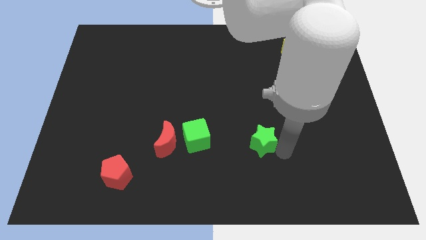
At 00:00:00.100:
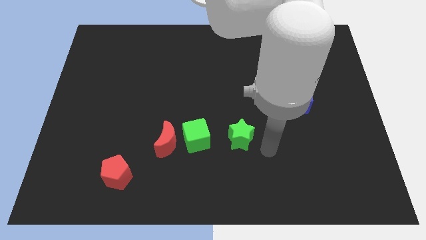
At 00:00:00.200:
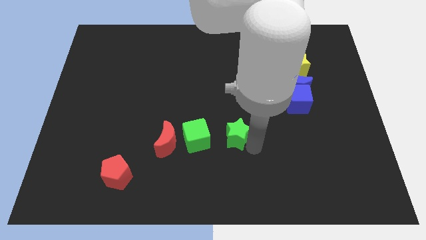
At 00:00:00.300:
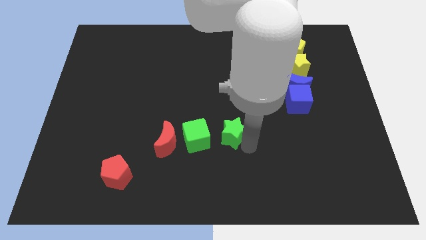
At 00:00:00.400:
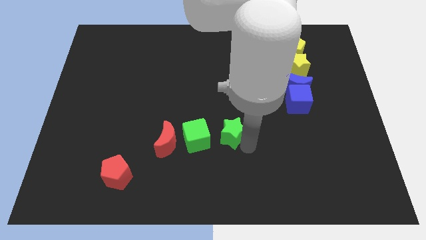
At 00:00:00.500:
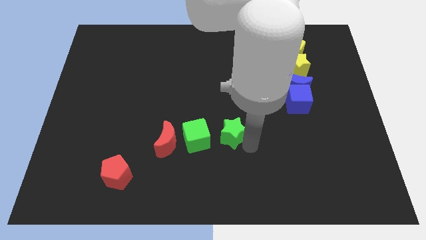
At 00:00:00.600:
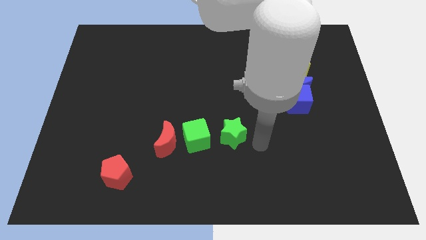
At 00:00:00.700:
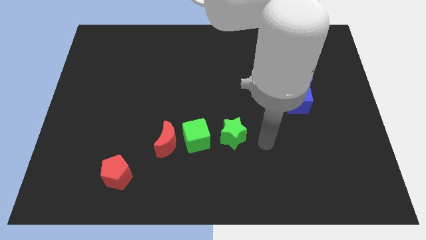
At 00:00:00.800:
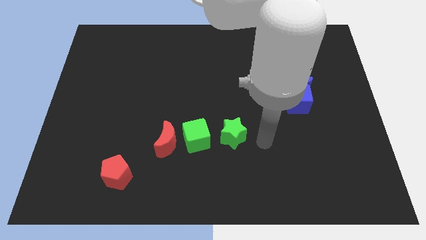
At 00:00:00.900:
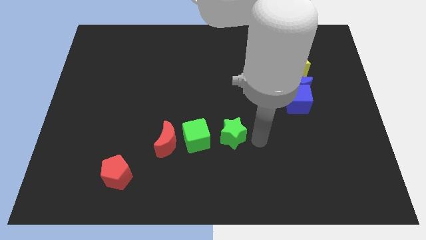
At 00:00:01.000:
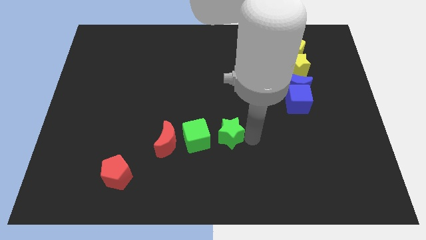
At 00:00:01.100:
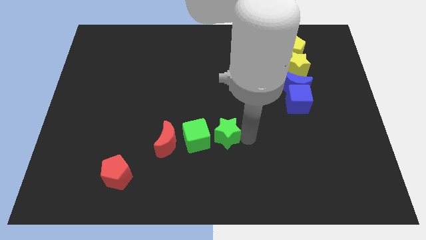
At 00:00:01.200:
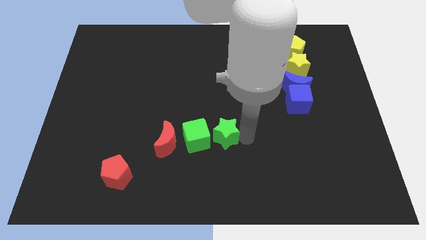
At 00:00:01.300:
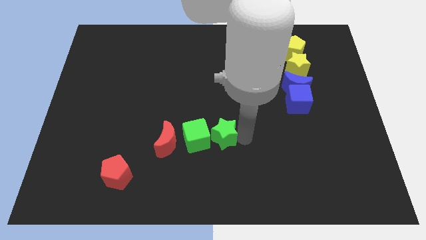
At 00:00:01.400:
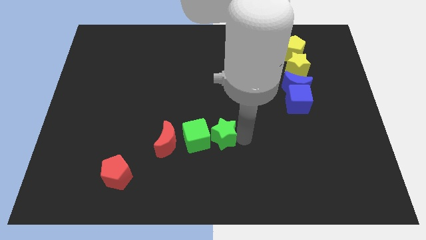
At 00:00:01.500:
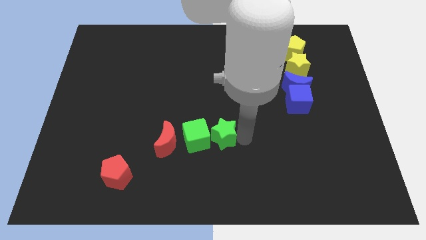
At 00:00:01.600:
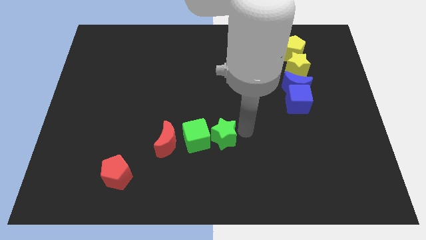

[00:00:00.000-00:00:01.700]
place the green star to the right side of the green cube

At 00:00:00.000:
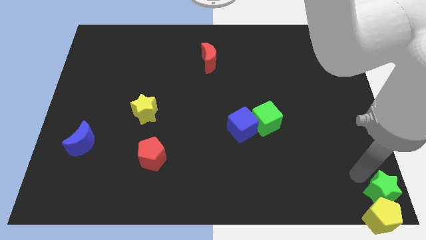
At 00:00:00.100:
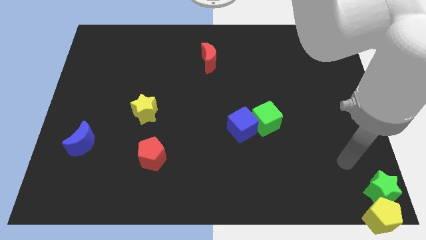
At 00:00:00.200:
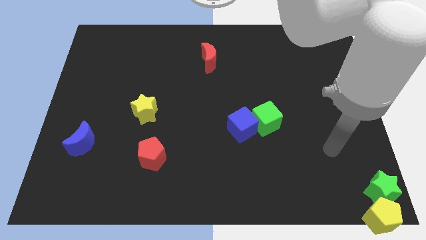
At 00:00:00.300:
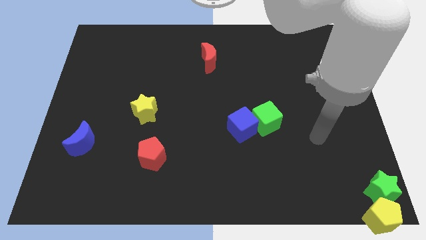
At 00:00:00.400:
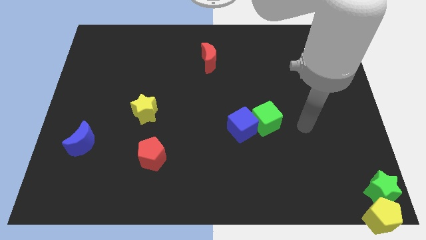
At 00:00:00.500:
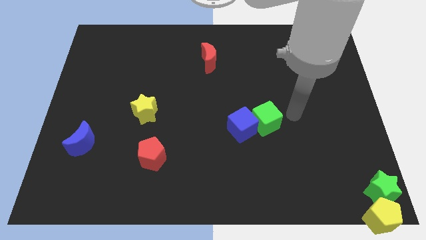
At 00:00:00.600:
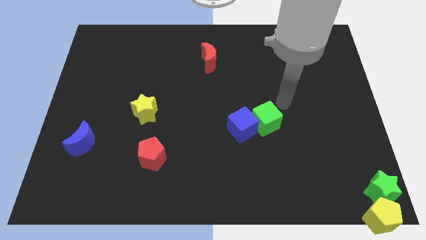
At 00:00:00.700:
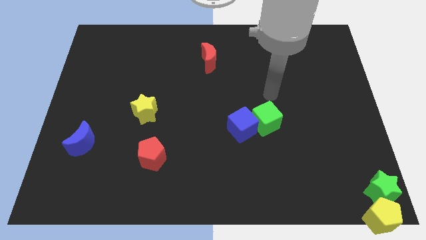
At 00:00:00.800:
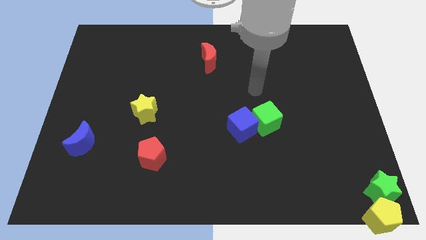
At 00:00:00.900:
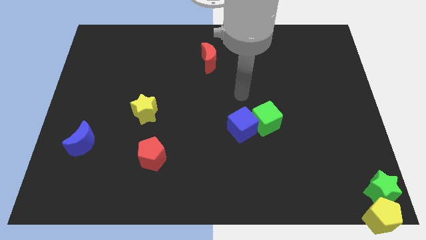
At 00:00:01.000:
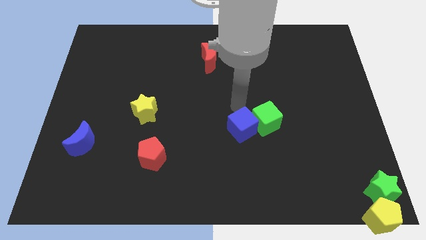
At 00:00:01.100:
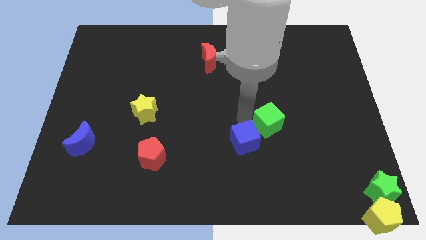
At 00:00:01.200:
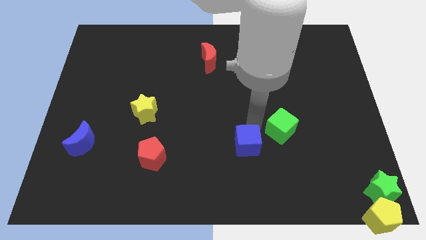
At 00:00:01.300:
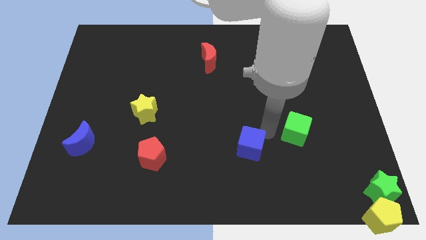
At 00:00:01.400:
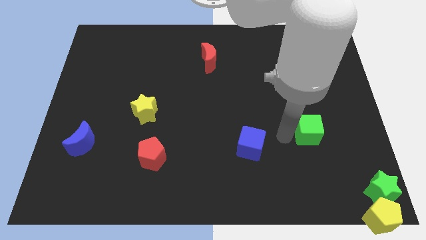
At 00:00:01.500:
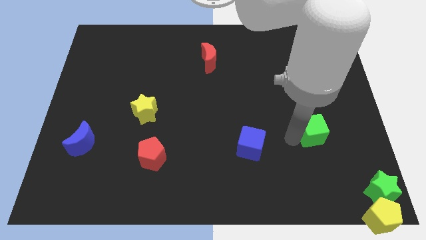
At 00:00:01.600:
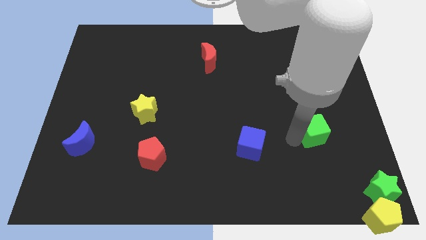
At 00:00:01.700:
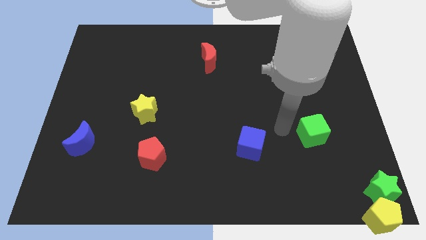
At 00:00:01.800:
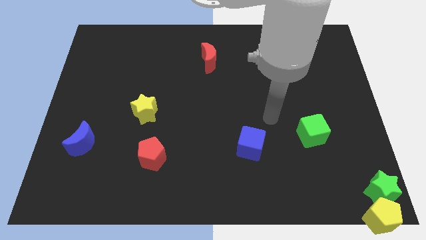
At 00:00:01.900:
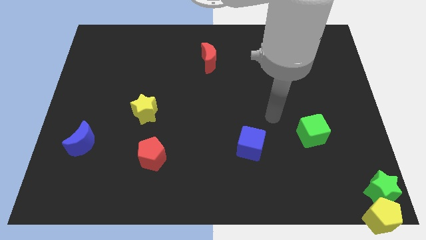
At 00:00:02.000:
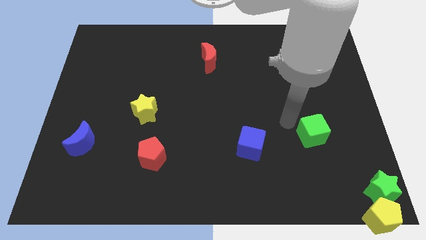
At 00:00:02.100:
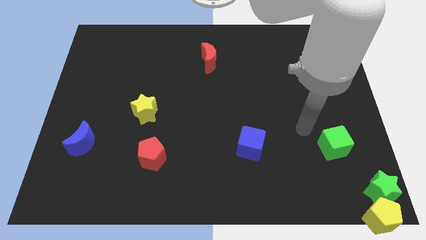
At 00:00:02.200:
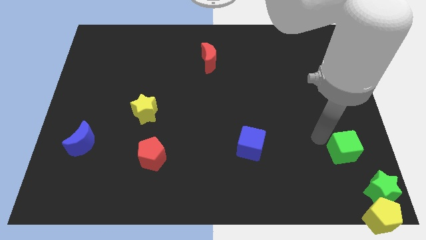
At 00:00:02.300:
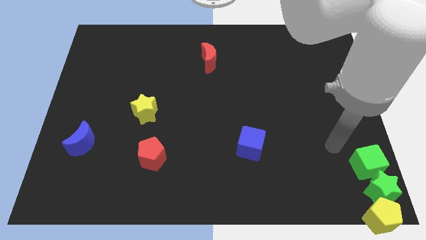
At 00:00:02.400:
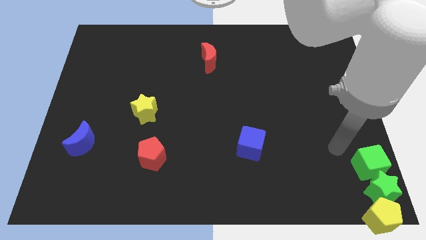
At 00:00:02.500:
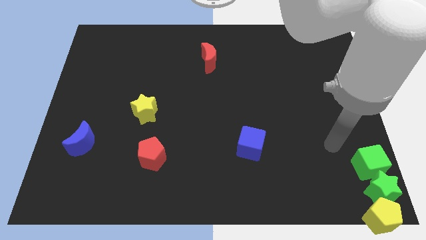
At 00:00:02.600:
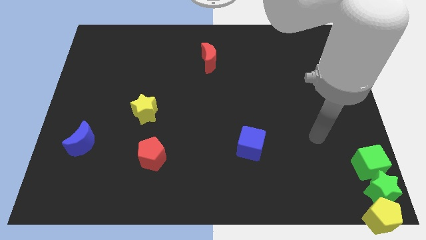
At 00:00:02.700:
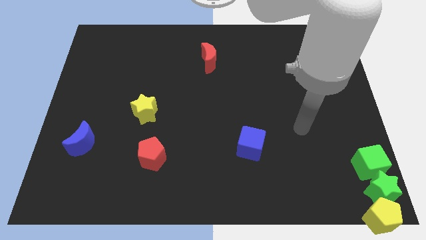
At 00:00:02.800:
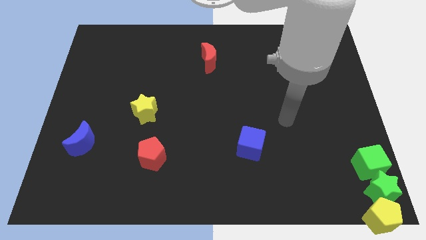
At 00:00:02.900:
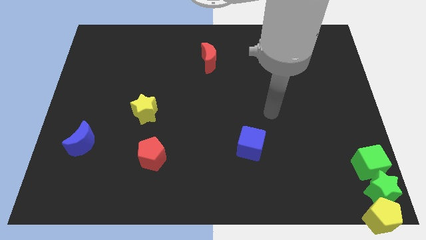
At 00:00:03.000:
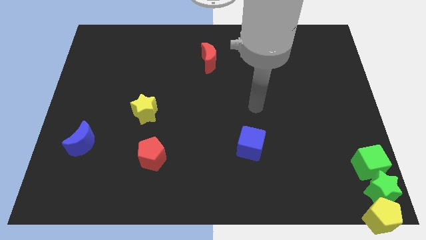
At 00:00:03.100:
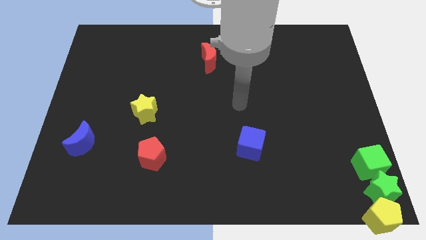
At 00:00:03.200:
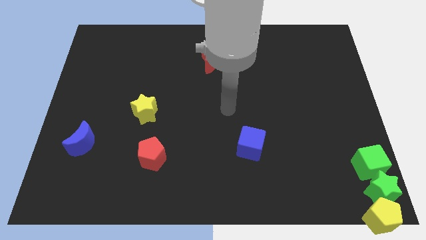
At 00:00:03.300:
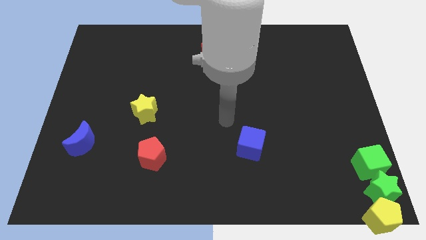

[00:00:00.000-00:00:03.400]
move the green cube into the green star

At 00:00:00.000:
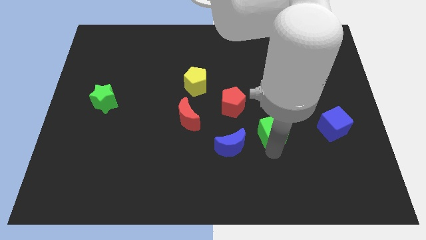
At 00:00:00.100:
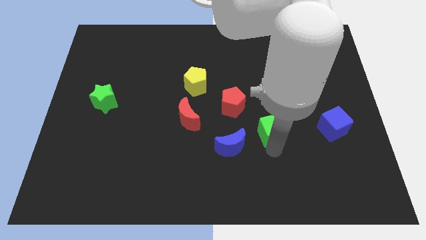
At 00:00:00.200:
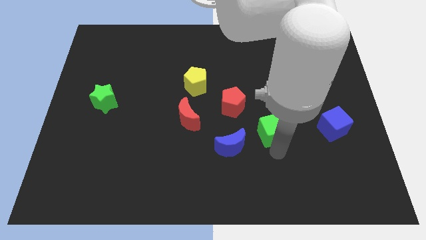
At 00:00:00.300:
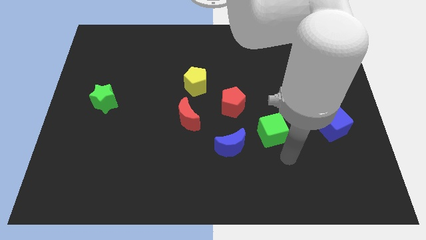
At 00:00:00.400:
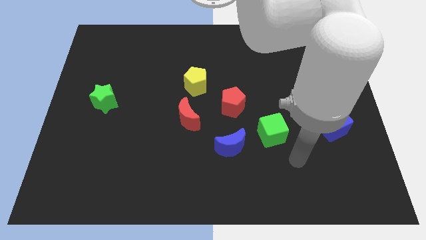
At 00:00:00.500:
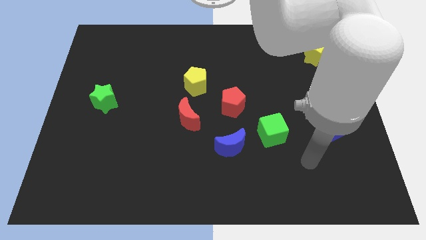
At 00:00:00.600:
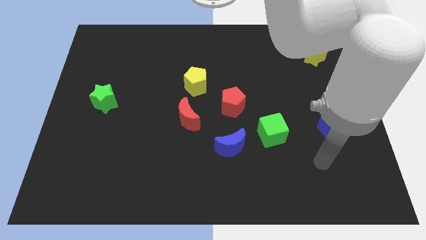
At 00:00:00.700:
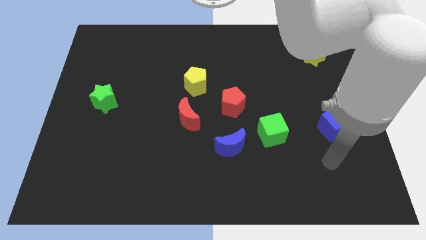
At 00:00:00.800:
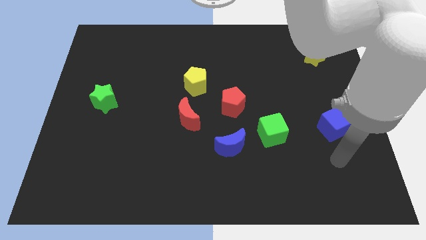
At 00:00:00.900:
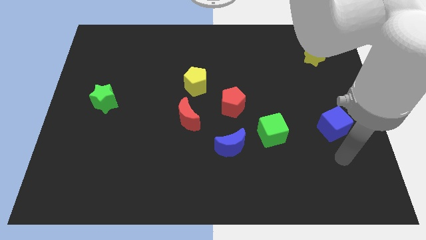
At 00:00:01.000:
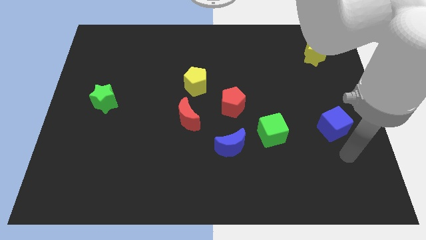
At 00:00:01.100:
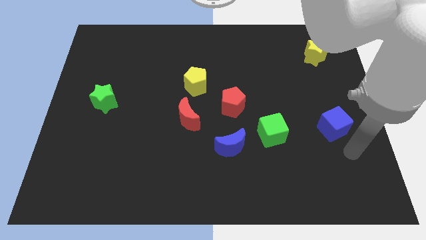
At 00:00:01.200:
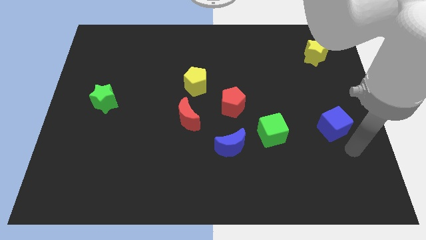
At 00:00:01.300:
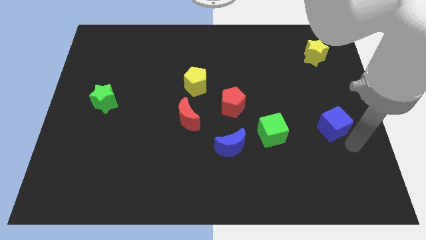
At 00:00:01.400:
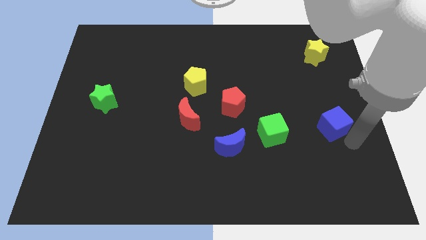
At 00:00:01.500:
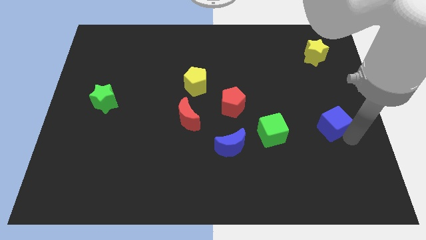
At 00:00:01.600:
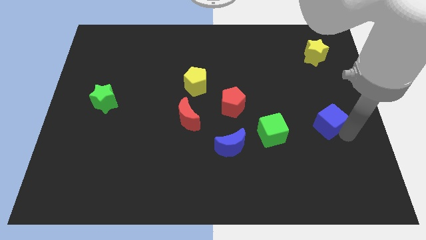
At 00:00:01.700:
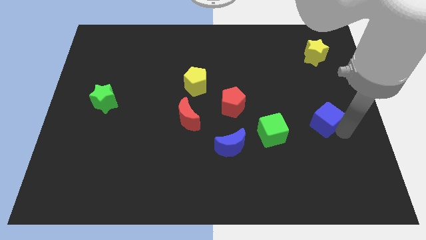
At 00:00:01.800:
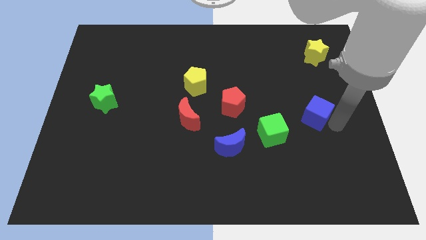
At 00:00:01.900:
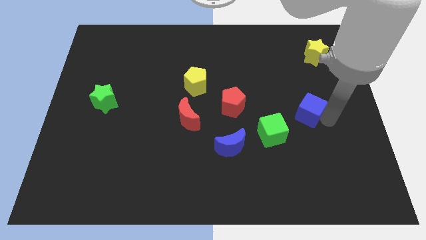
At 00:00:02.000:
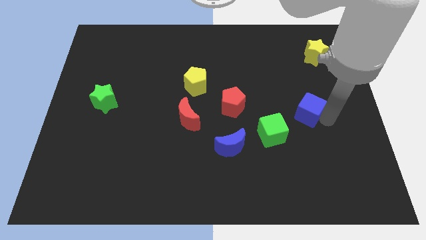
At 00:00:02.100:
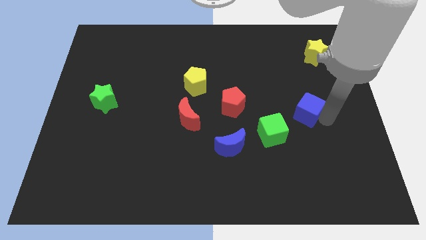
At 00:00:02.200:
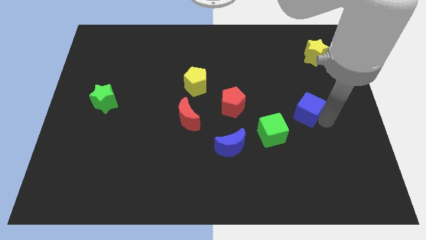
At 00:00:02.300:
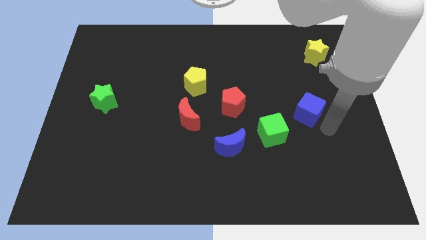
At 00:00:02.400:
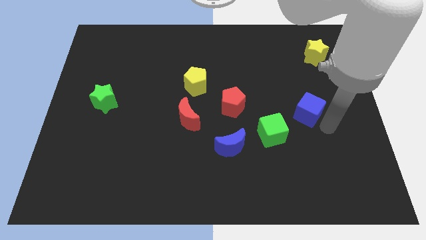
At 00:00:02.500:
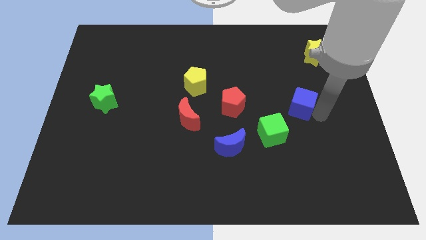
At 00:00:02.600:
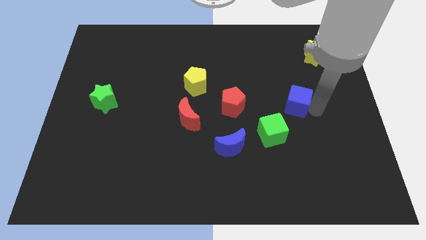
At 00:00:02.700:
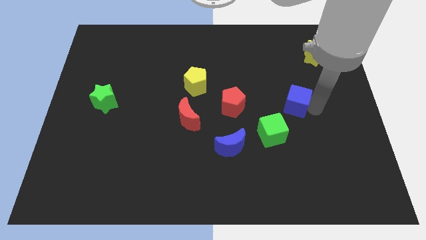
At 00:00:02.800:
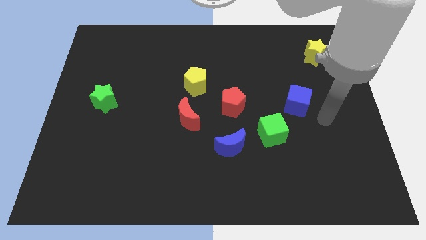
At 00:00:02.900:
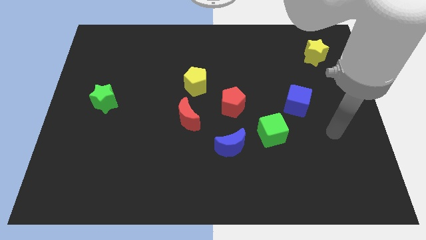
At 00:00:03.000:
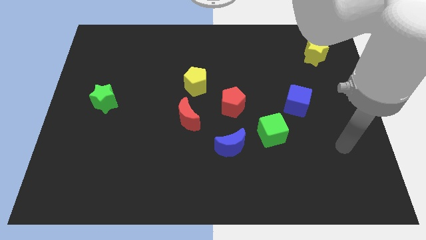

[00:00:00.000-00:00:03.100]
slide the blue cube to the right of the red pentagon

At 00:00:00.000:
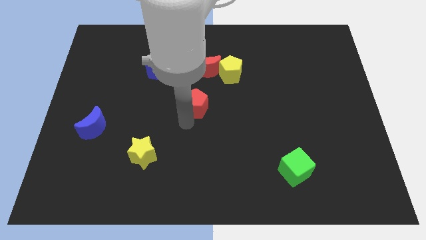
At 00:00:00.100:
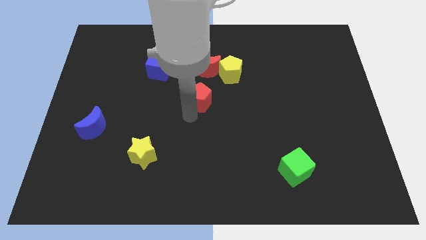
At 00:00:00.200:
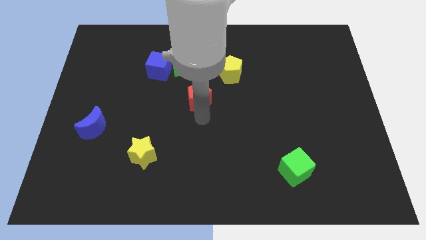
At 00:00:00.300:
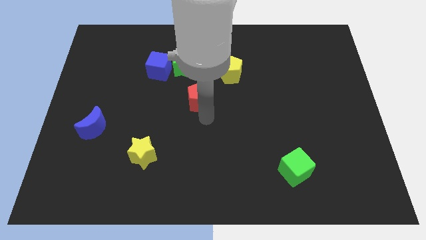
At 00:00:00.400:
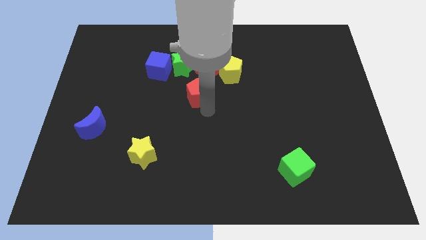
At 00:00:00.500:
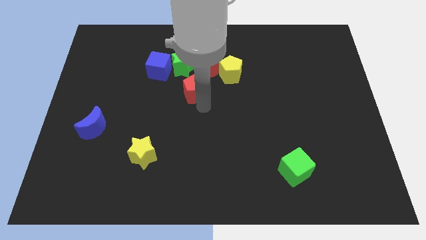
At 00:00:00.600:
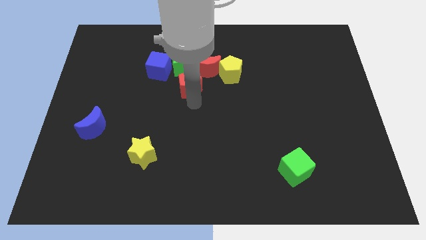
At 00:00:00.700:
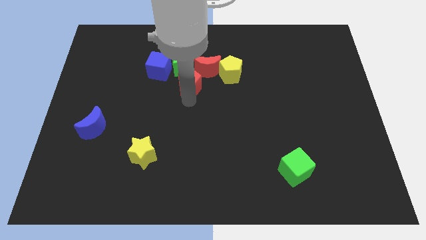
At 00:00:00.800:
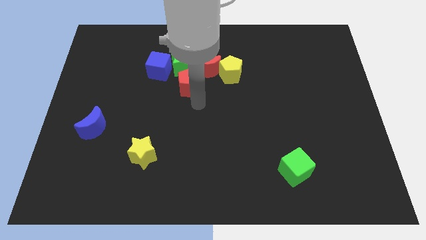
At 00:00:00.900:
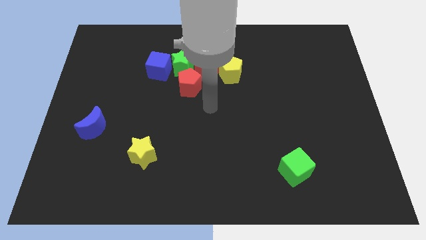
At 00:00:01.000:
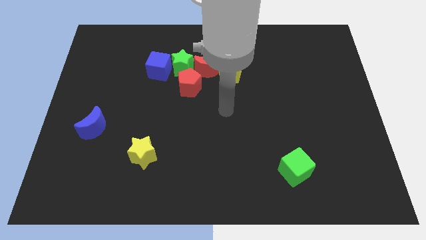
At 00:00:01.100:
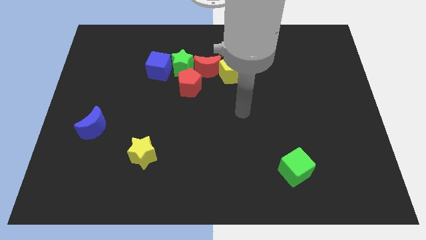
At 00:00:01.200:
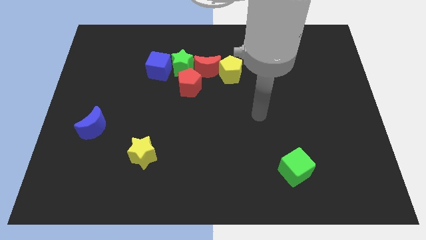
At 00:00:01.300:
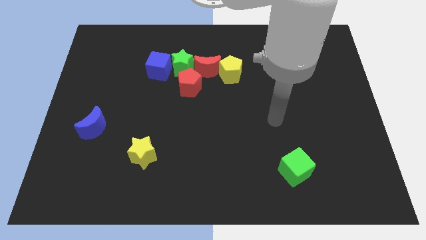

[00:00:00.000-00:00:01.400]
move the red pentagon below to the green star
